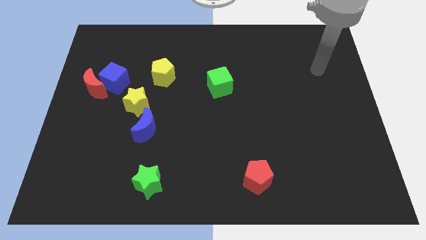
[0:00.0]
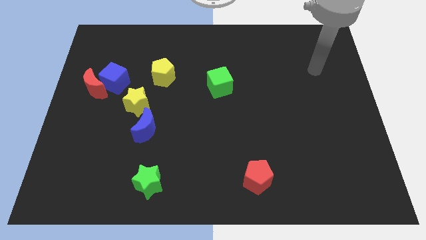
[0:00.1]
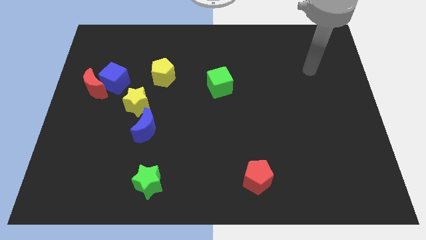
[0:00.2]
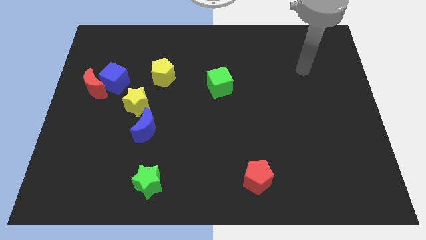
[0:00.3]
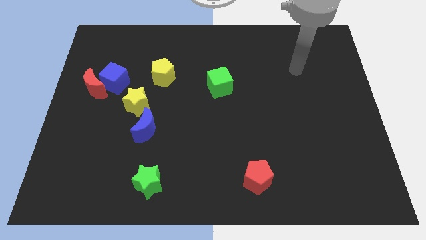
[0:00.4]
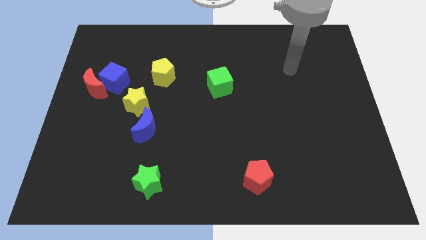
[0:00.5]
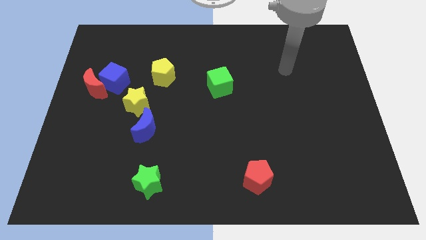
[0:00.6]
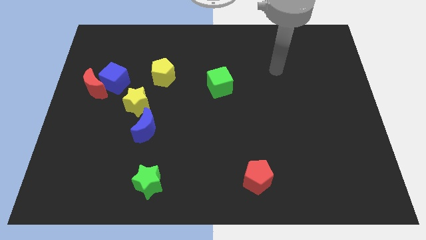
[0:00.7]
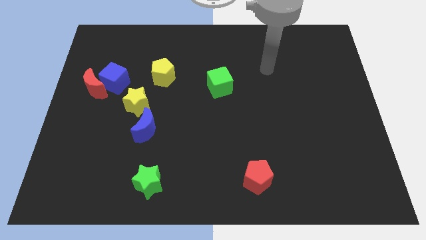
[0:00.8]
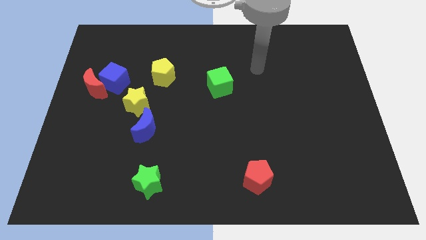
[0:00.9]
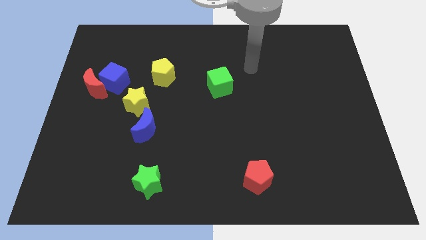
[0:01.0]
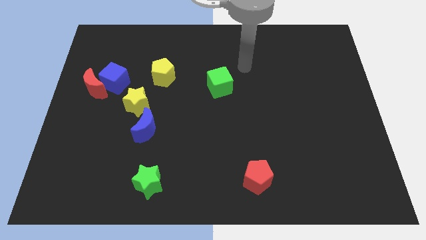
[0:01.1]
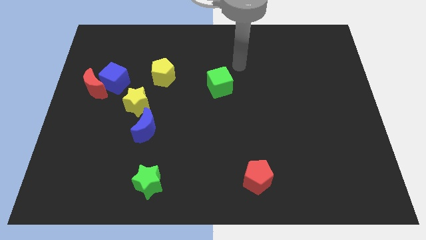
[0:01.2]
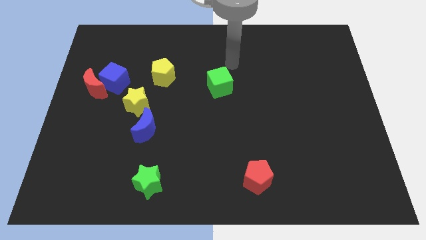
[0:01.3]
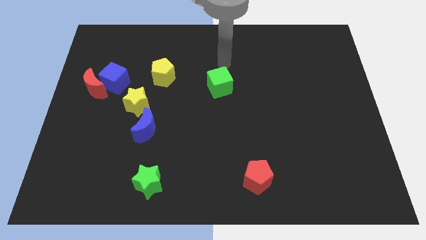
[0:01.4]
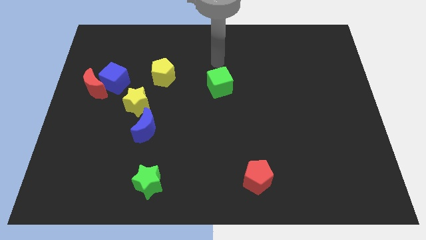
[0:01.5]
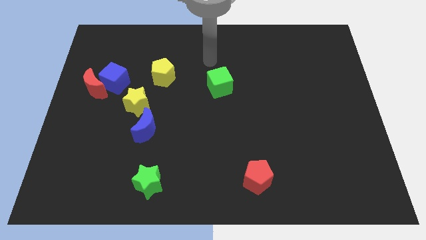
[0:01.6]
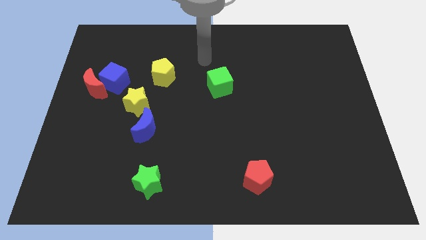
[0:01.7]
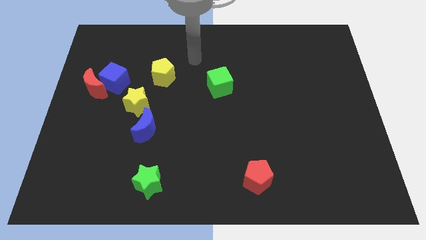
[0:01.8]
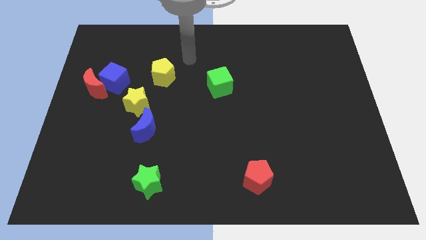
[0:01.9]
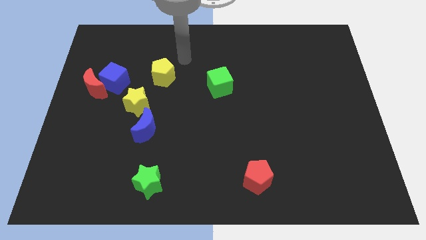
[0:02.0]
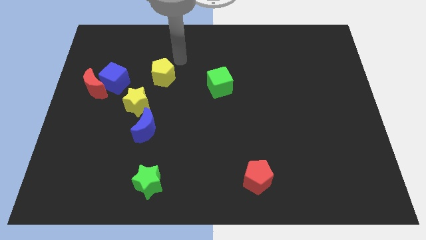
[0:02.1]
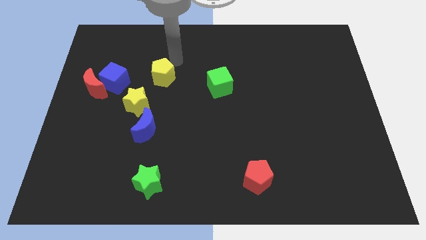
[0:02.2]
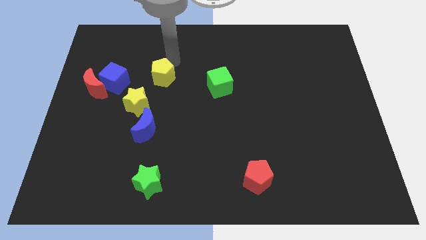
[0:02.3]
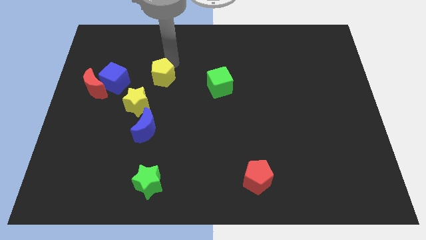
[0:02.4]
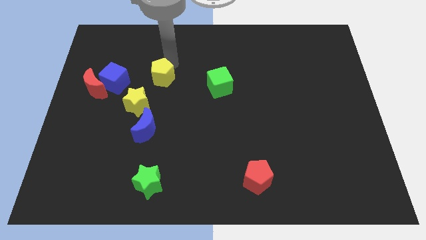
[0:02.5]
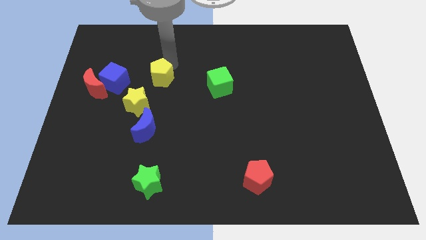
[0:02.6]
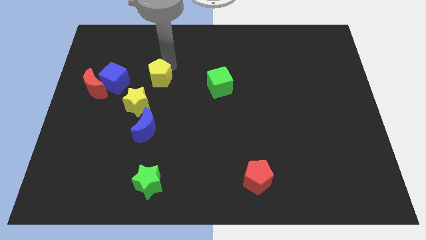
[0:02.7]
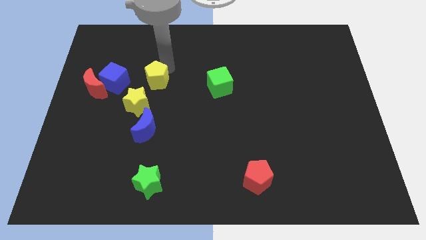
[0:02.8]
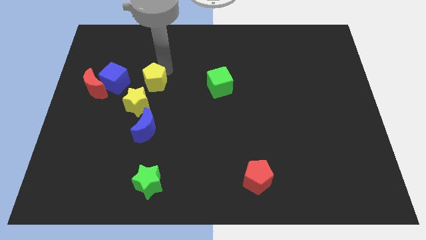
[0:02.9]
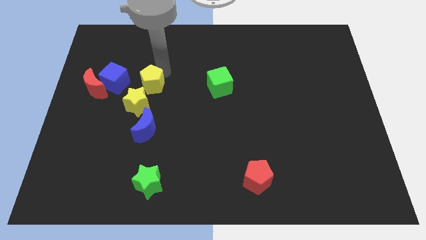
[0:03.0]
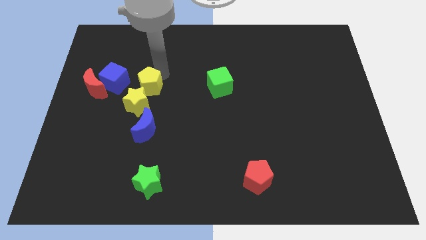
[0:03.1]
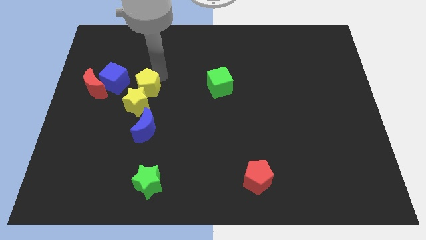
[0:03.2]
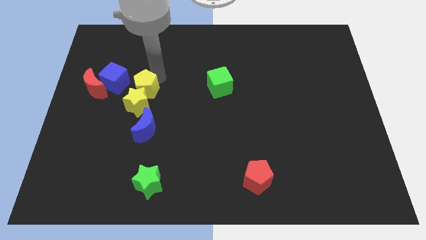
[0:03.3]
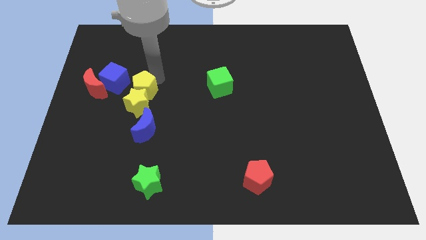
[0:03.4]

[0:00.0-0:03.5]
slide the yellow pentagon to the yellow star

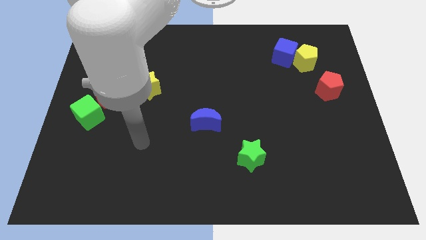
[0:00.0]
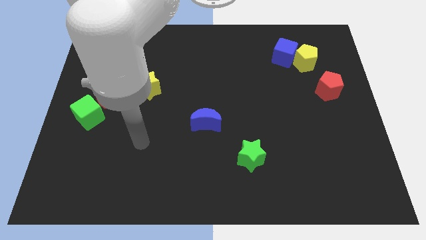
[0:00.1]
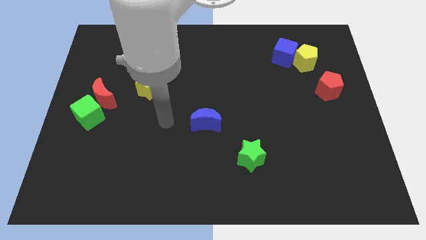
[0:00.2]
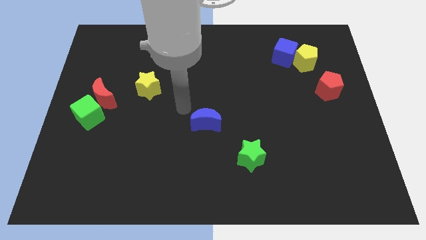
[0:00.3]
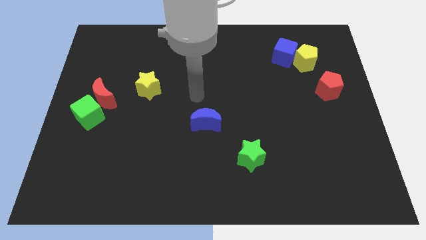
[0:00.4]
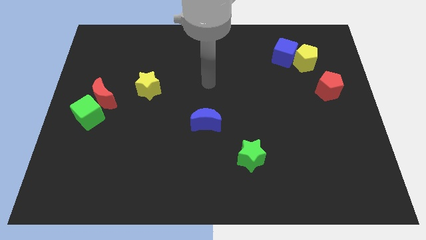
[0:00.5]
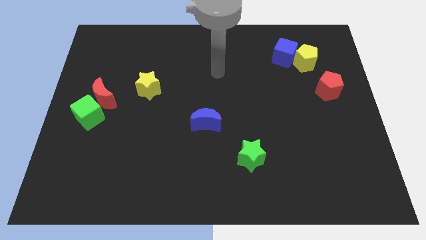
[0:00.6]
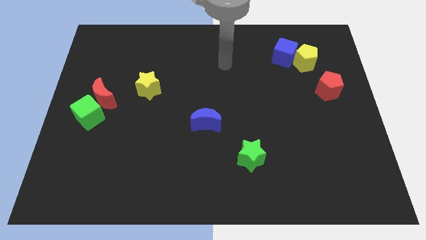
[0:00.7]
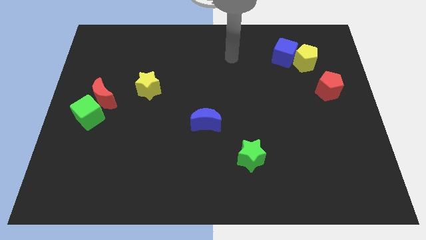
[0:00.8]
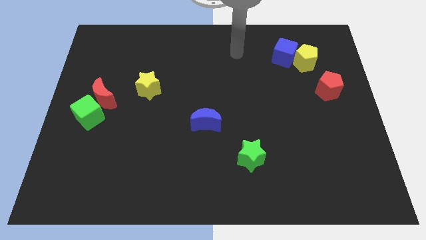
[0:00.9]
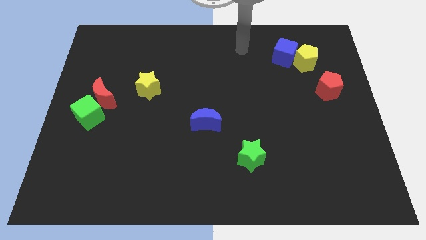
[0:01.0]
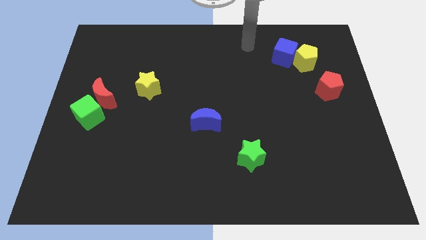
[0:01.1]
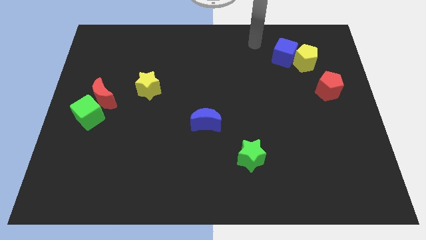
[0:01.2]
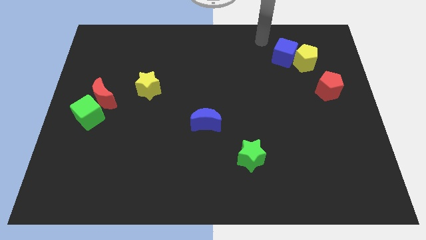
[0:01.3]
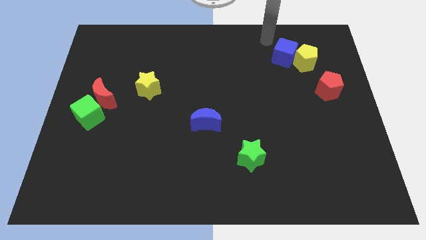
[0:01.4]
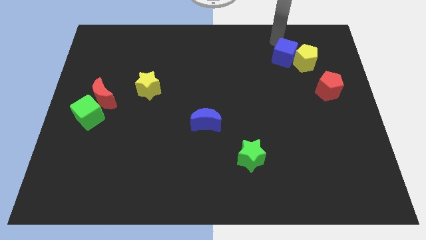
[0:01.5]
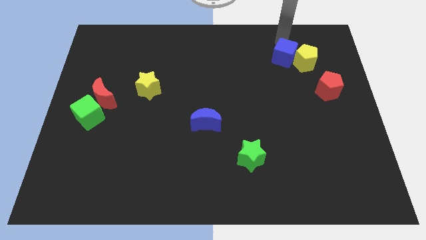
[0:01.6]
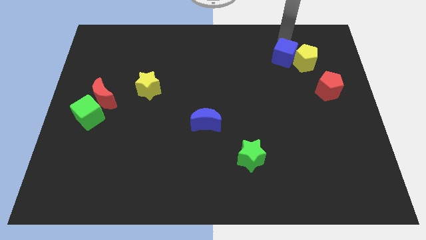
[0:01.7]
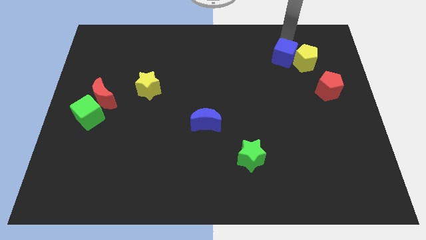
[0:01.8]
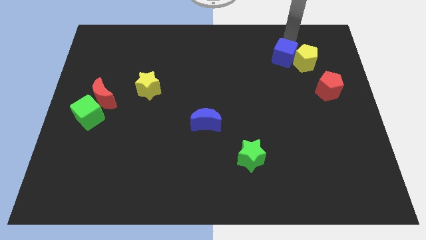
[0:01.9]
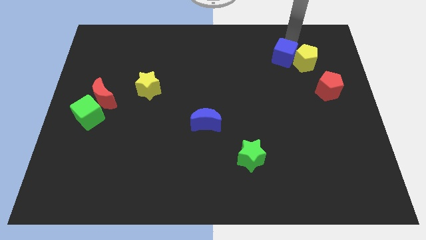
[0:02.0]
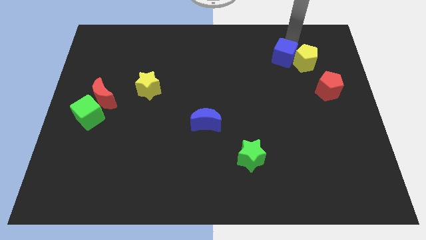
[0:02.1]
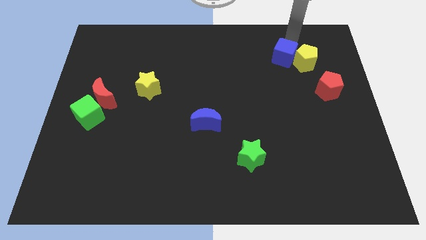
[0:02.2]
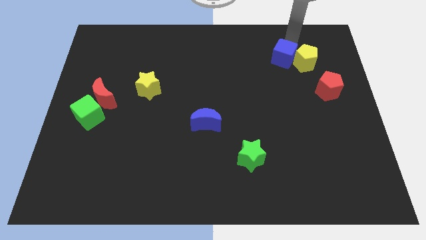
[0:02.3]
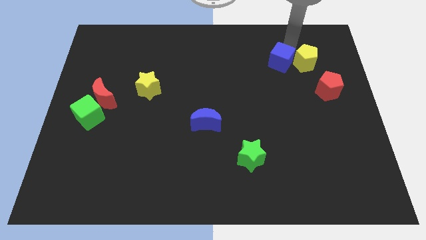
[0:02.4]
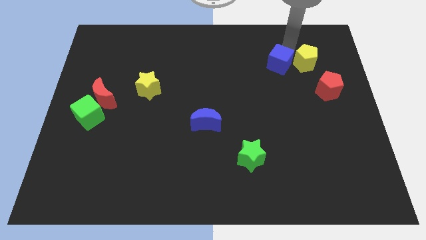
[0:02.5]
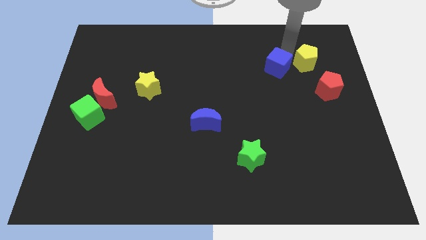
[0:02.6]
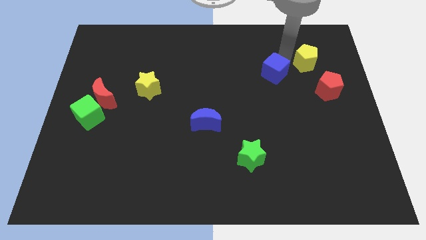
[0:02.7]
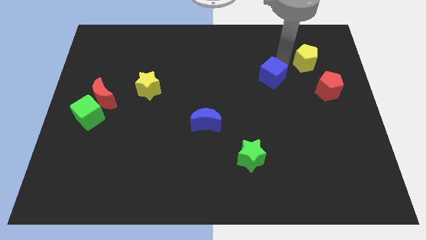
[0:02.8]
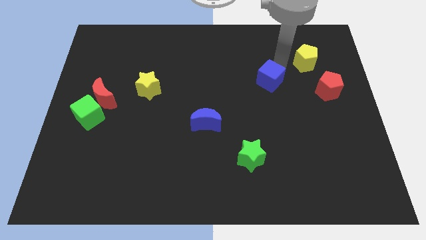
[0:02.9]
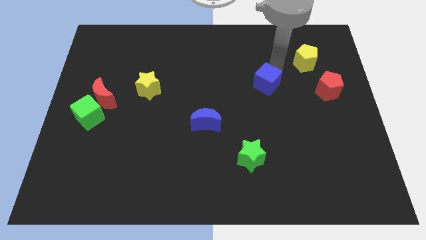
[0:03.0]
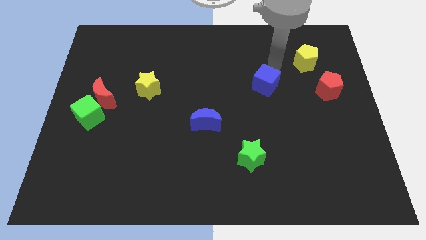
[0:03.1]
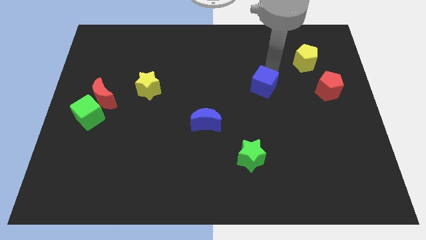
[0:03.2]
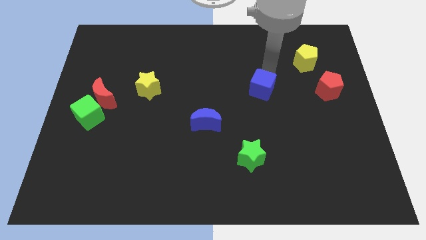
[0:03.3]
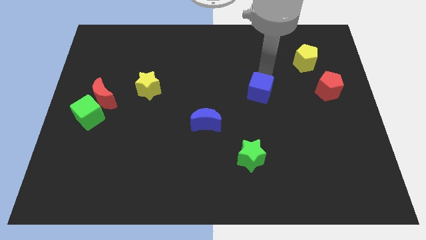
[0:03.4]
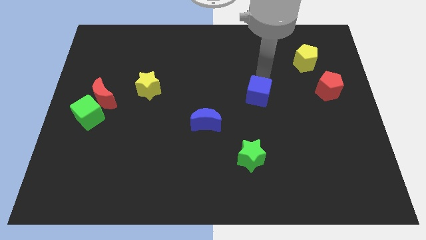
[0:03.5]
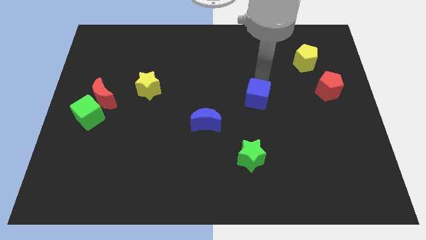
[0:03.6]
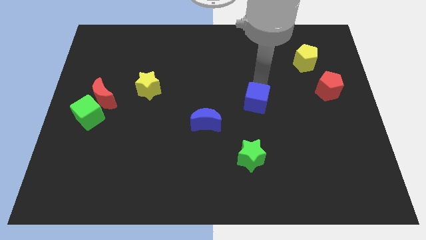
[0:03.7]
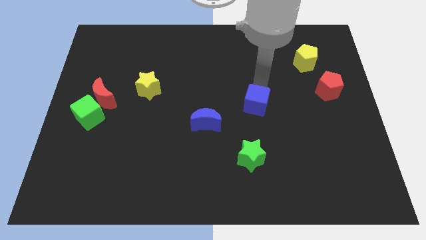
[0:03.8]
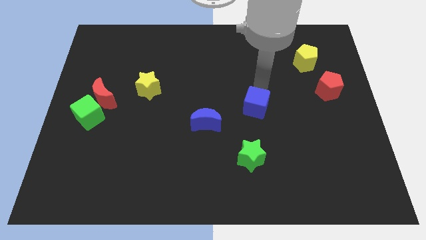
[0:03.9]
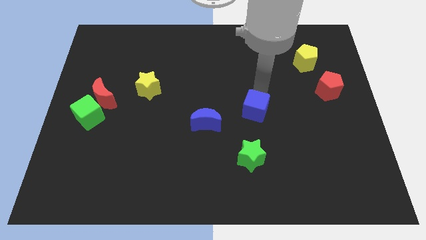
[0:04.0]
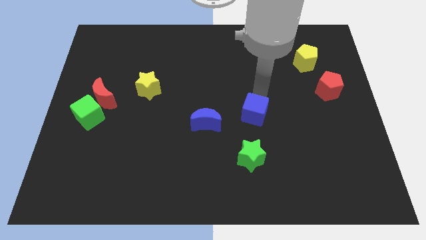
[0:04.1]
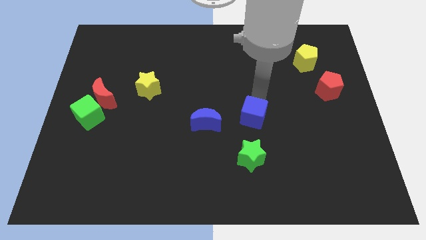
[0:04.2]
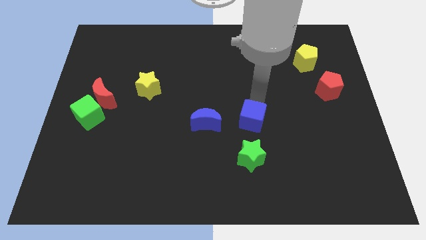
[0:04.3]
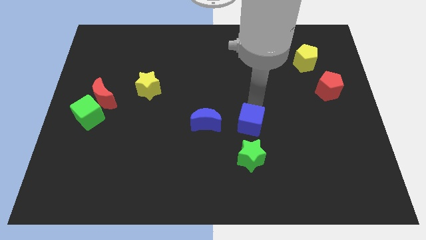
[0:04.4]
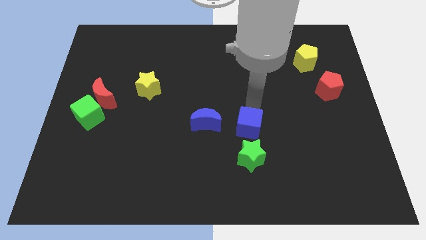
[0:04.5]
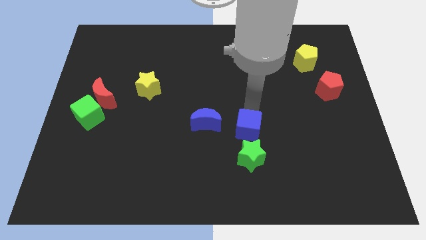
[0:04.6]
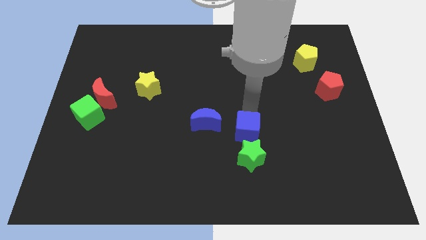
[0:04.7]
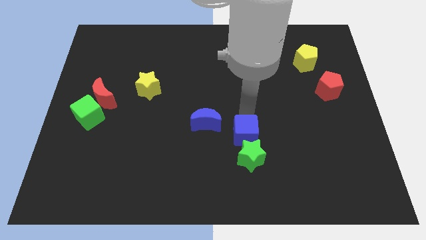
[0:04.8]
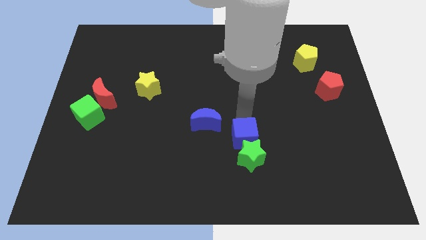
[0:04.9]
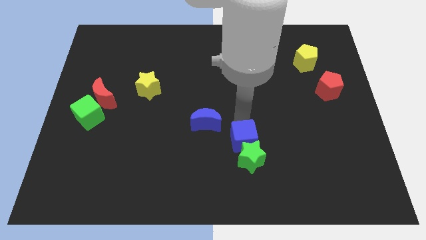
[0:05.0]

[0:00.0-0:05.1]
move the blue cube close to the green star
